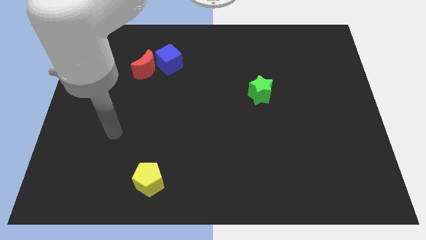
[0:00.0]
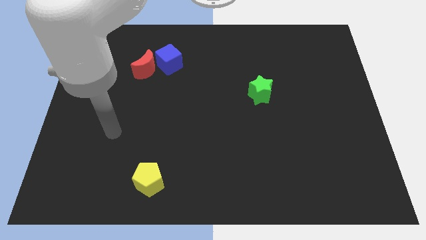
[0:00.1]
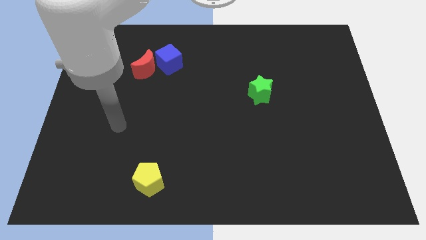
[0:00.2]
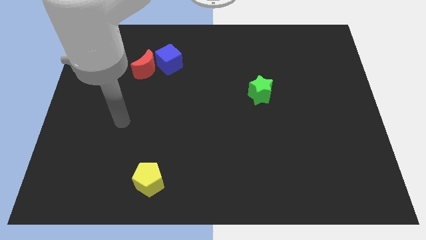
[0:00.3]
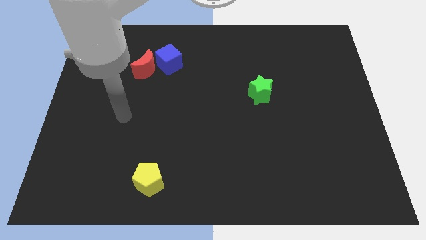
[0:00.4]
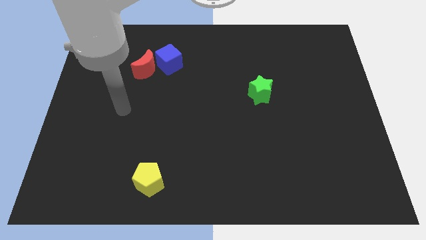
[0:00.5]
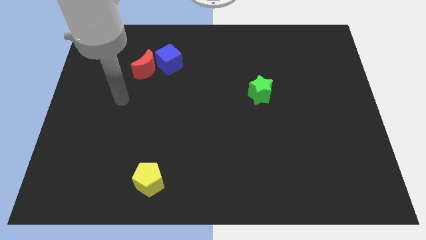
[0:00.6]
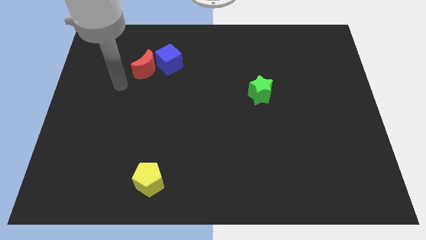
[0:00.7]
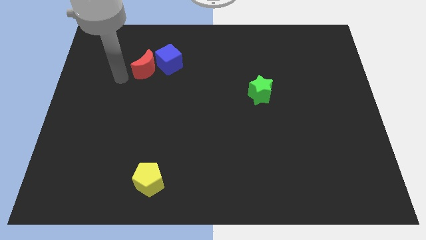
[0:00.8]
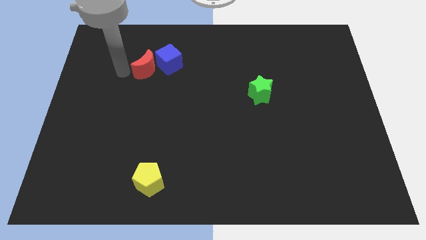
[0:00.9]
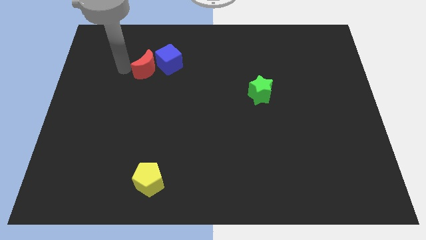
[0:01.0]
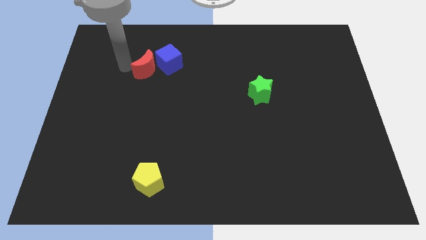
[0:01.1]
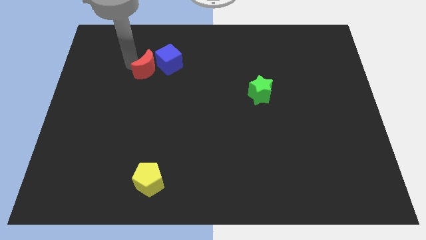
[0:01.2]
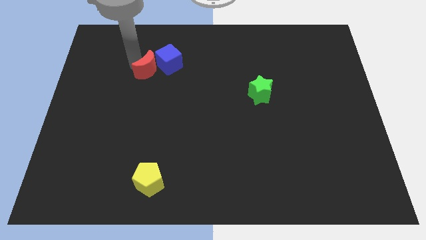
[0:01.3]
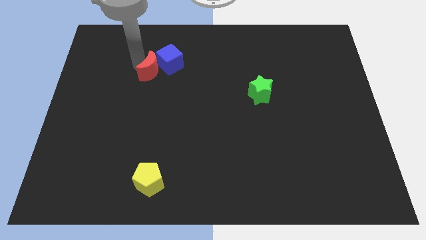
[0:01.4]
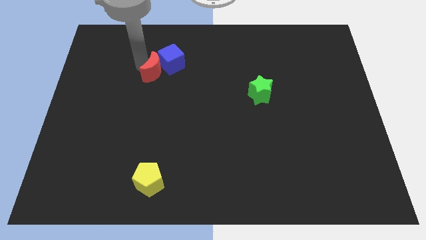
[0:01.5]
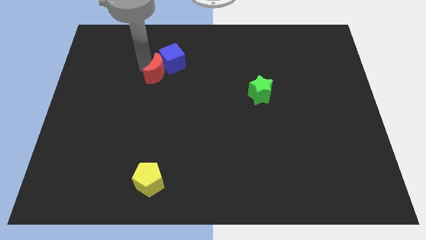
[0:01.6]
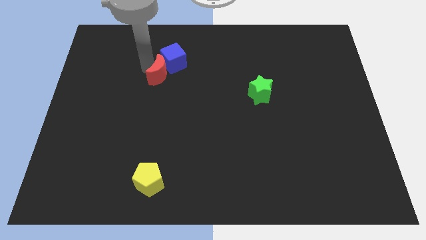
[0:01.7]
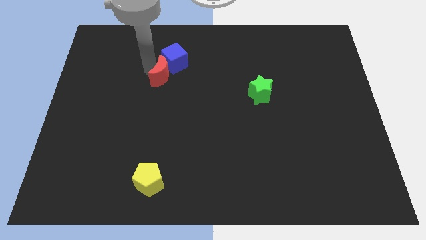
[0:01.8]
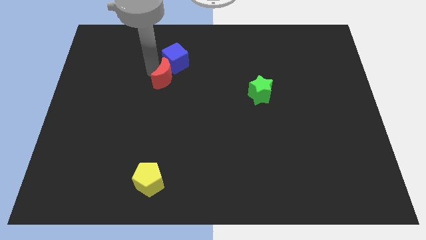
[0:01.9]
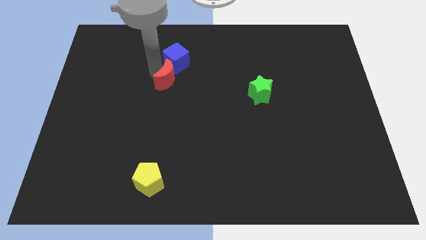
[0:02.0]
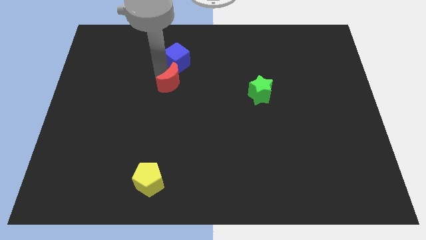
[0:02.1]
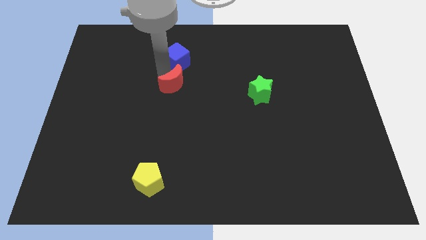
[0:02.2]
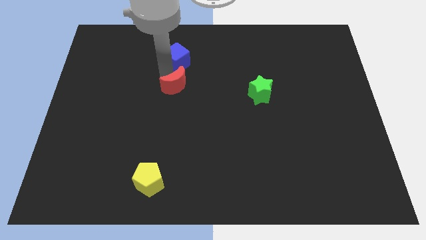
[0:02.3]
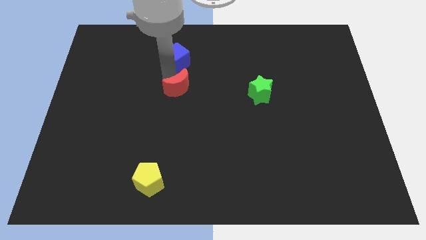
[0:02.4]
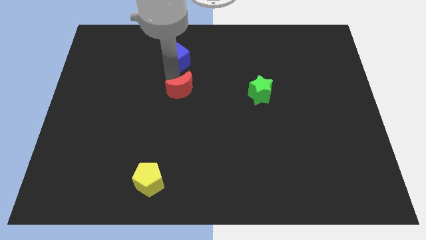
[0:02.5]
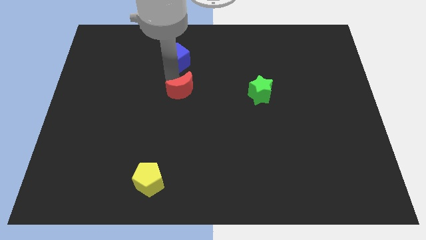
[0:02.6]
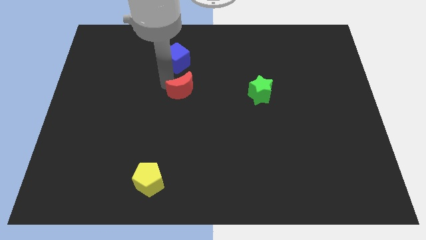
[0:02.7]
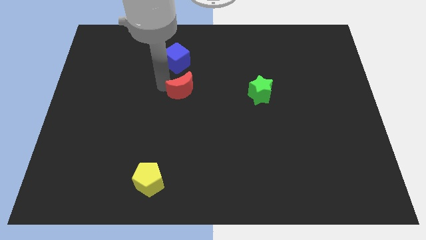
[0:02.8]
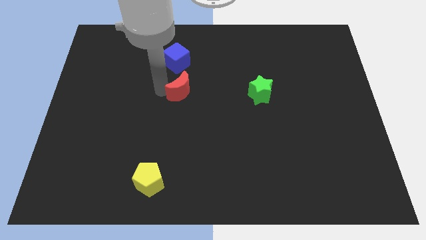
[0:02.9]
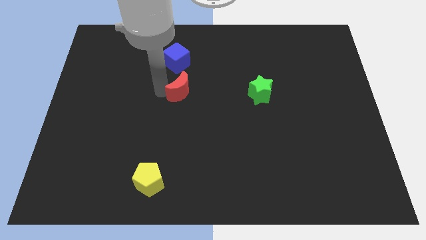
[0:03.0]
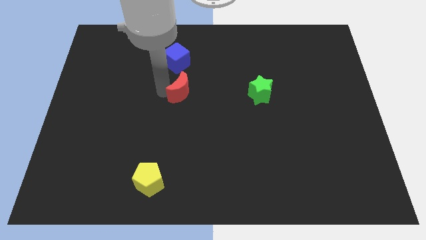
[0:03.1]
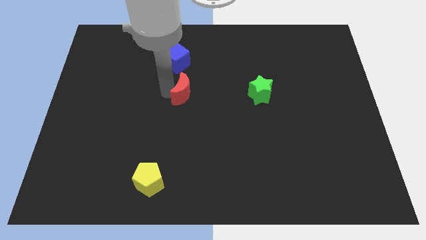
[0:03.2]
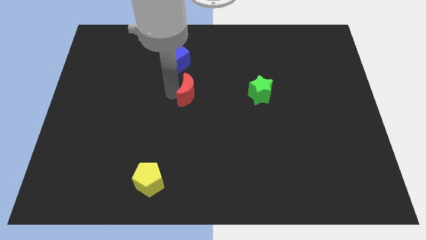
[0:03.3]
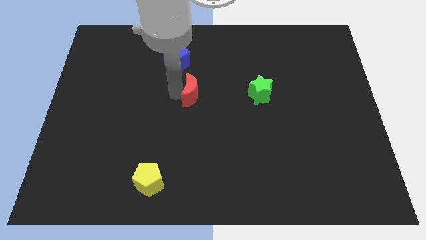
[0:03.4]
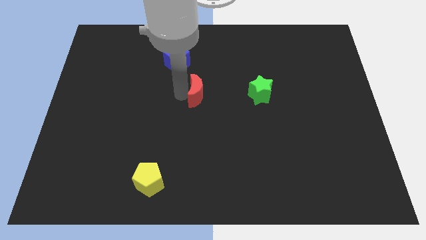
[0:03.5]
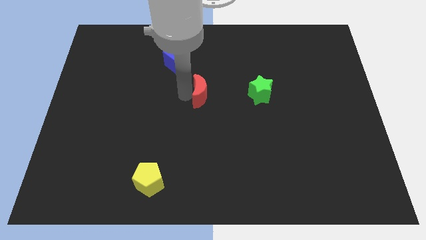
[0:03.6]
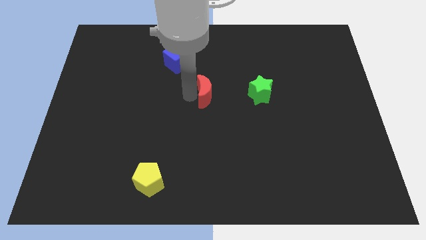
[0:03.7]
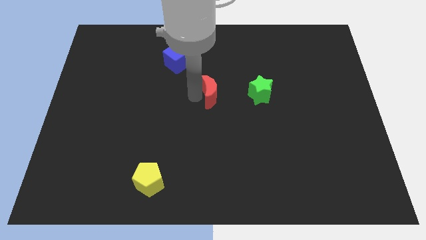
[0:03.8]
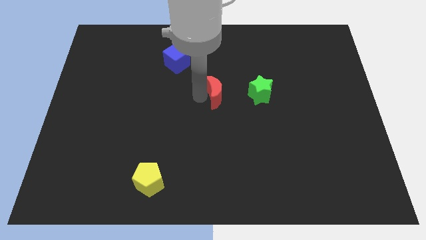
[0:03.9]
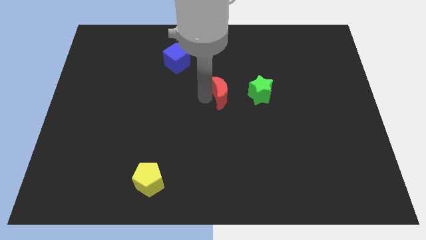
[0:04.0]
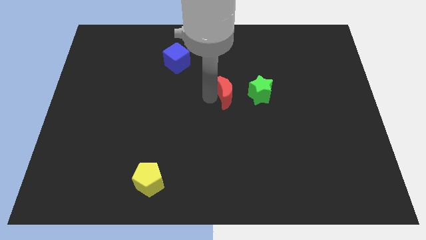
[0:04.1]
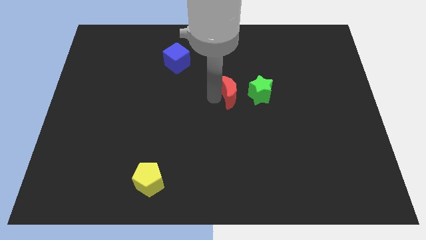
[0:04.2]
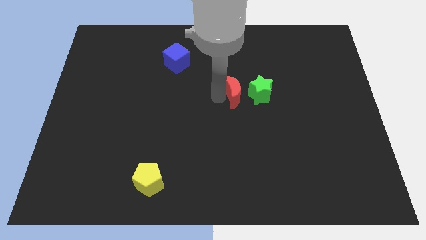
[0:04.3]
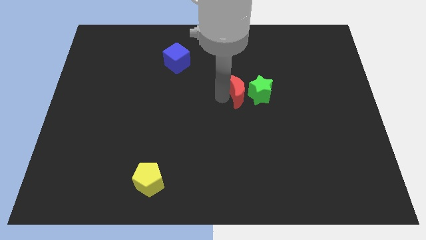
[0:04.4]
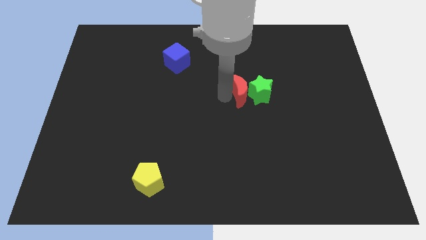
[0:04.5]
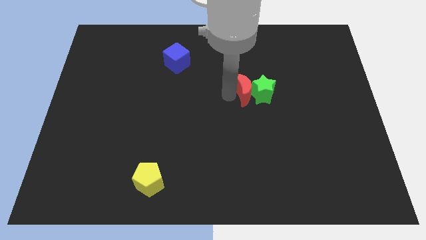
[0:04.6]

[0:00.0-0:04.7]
slide the red block to the green block

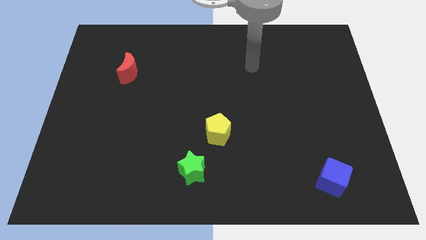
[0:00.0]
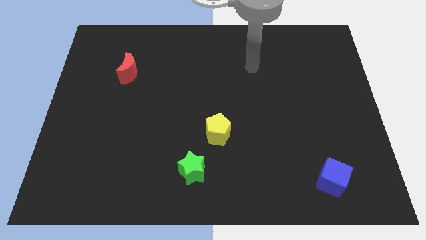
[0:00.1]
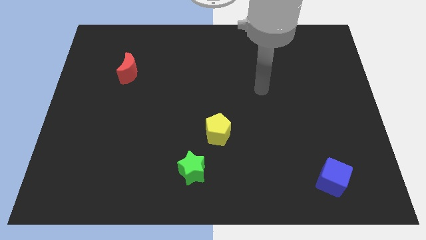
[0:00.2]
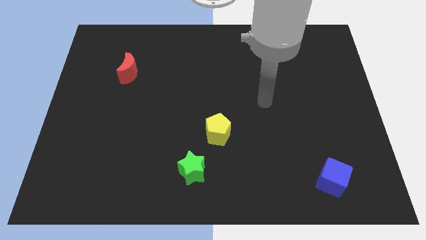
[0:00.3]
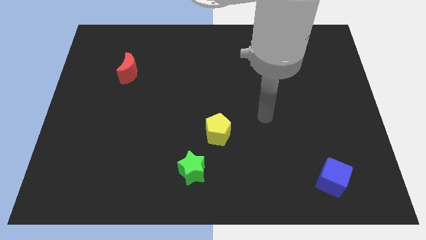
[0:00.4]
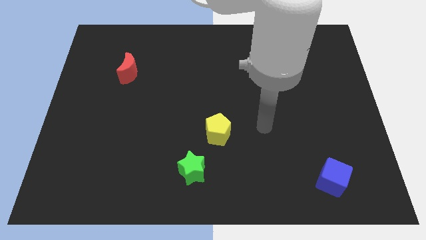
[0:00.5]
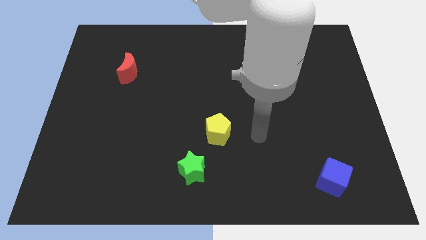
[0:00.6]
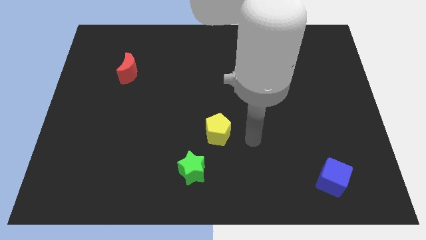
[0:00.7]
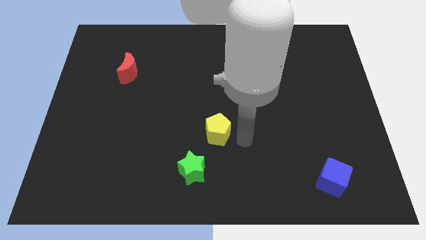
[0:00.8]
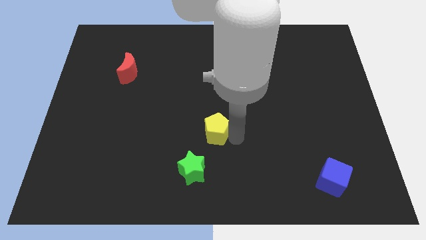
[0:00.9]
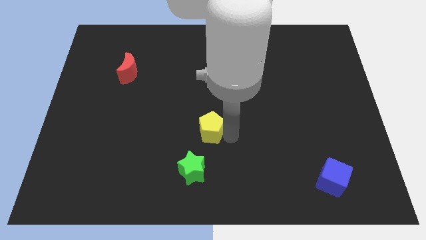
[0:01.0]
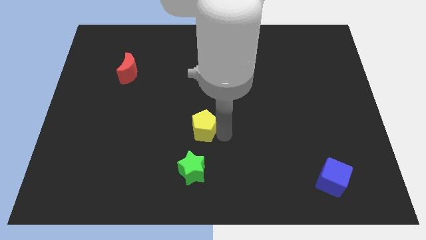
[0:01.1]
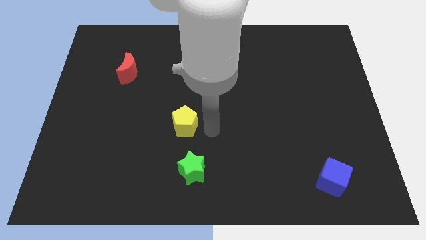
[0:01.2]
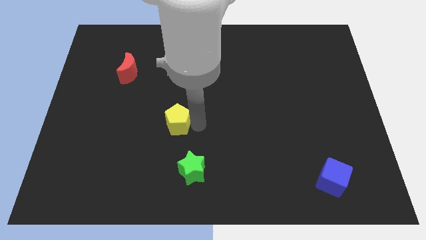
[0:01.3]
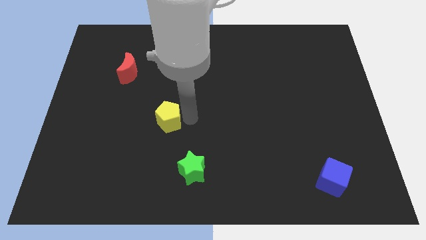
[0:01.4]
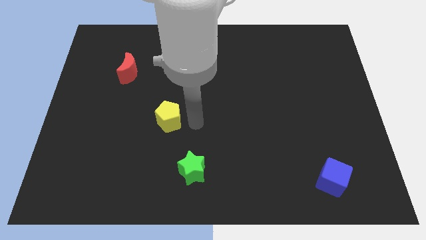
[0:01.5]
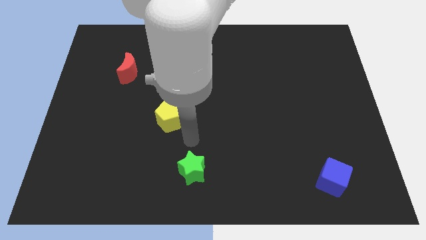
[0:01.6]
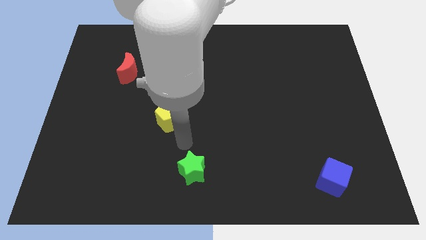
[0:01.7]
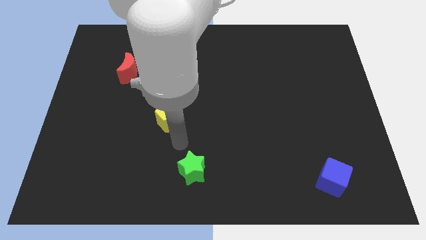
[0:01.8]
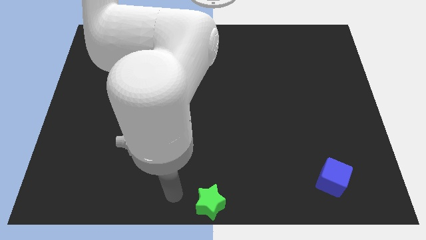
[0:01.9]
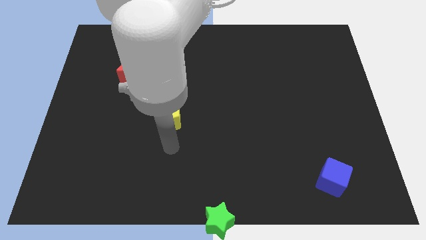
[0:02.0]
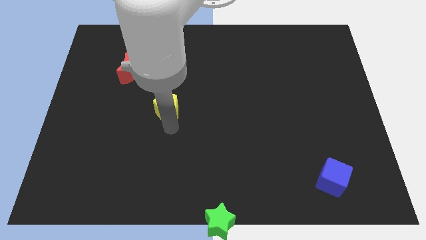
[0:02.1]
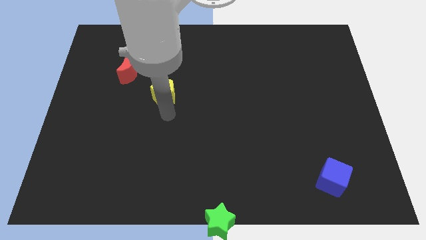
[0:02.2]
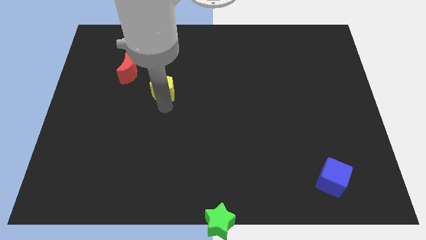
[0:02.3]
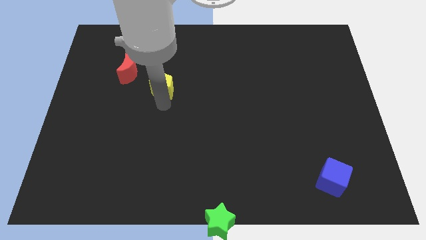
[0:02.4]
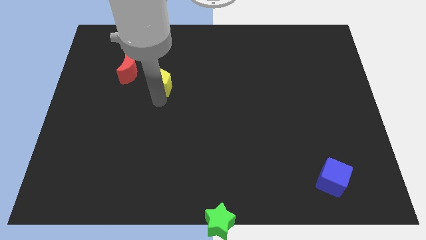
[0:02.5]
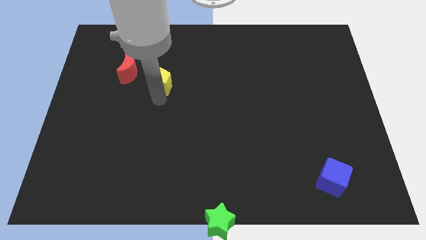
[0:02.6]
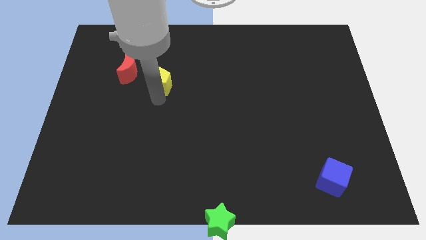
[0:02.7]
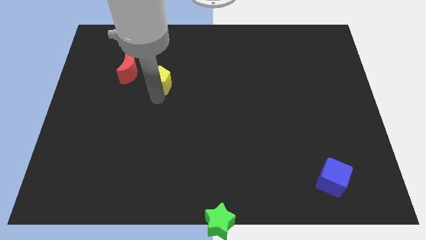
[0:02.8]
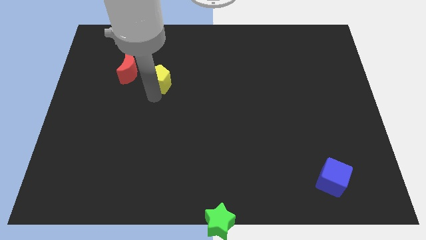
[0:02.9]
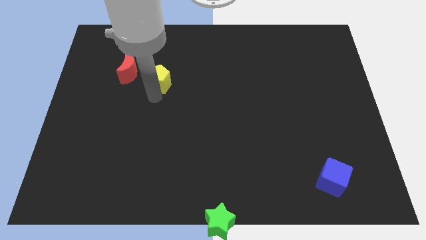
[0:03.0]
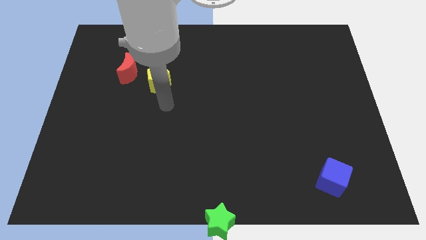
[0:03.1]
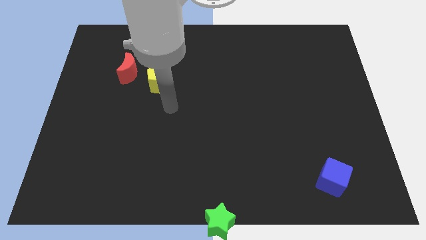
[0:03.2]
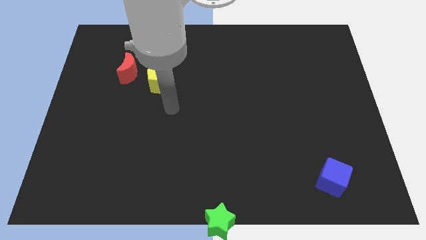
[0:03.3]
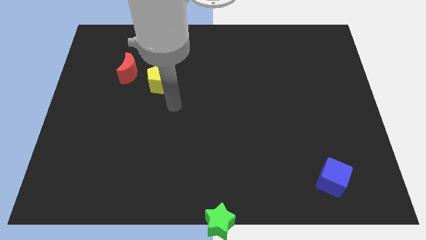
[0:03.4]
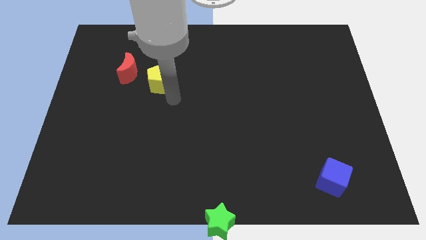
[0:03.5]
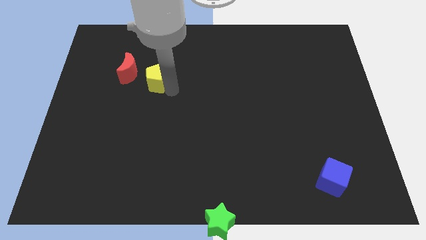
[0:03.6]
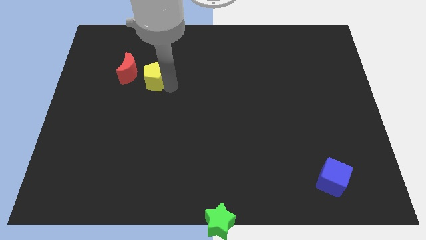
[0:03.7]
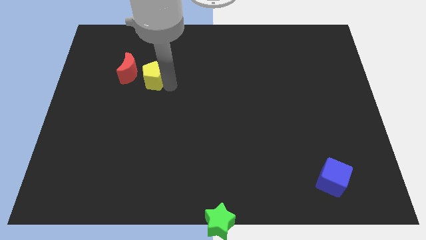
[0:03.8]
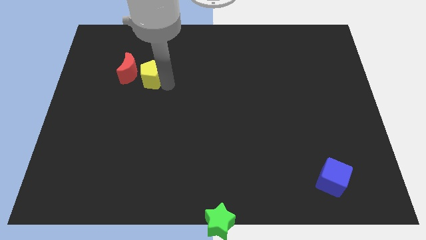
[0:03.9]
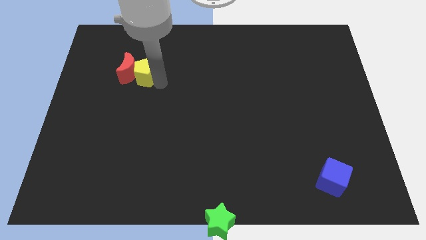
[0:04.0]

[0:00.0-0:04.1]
slide the yellow block to the moon
